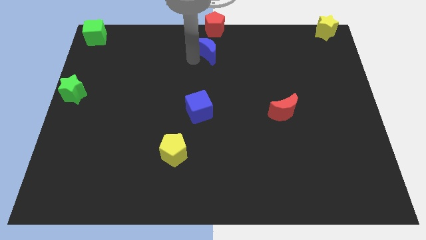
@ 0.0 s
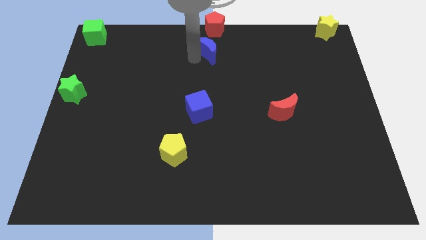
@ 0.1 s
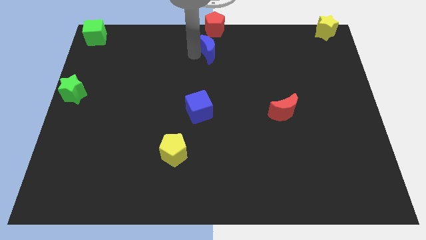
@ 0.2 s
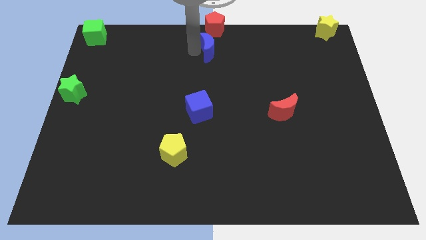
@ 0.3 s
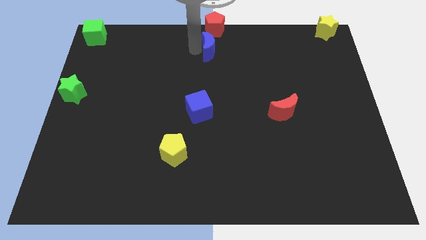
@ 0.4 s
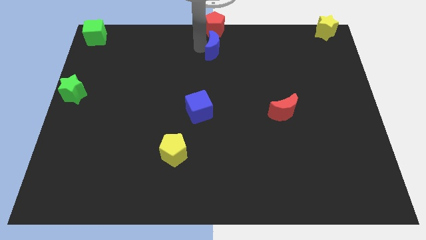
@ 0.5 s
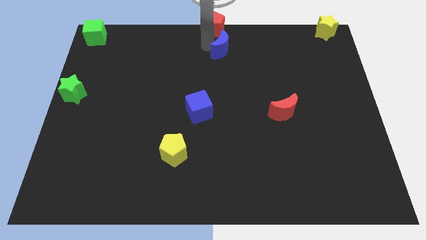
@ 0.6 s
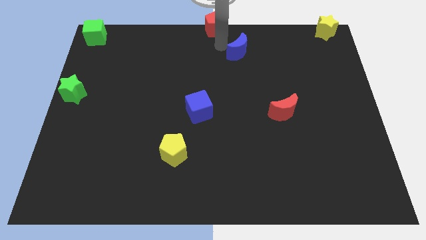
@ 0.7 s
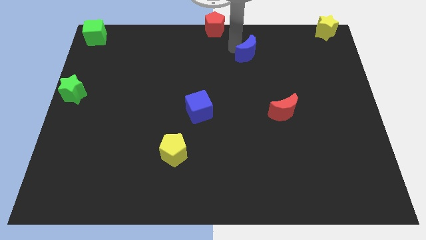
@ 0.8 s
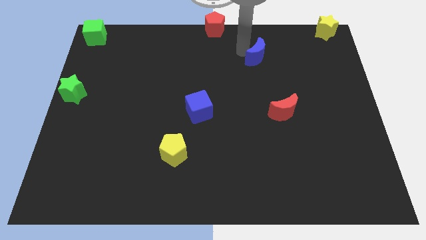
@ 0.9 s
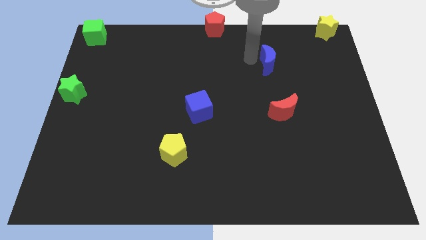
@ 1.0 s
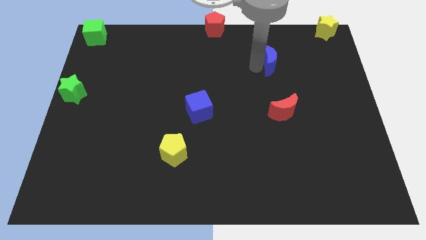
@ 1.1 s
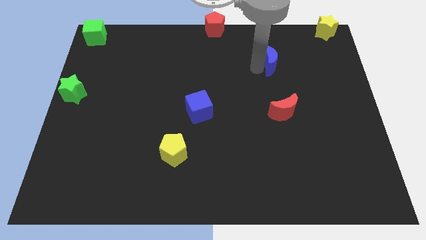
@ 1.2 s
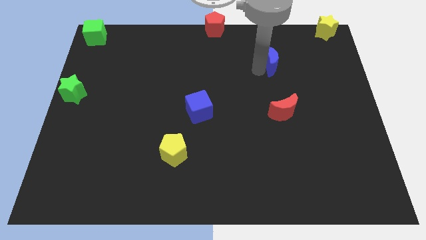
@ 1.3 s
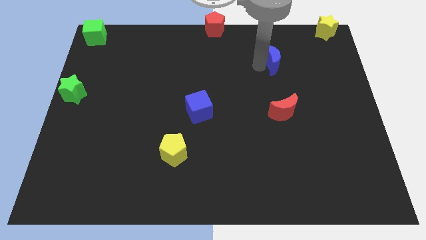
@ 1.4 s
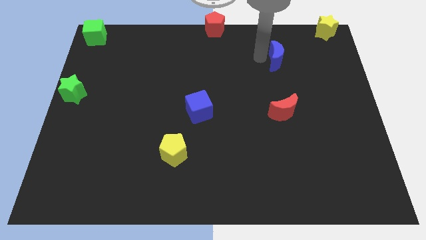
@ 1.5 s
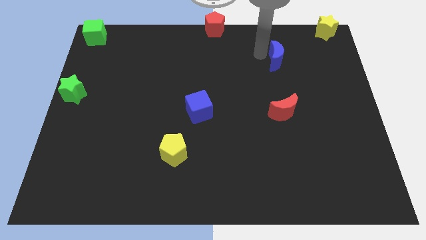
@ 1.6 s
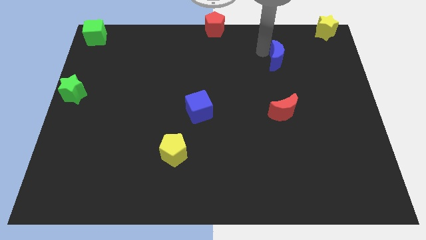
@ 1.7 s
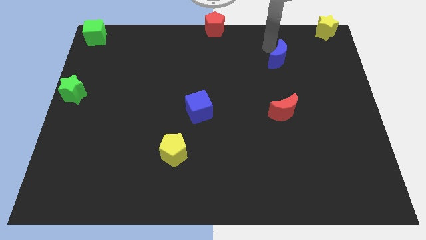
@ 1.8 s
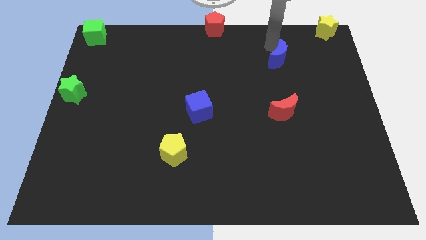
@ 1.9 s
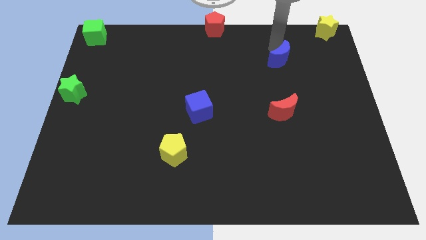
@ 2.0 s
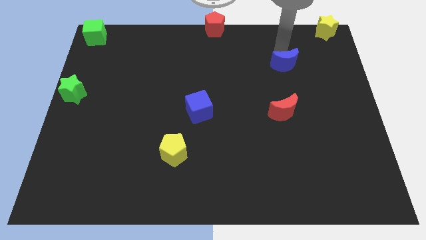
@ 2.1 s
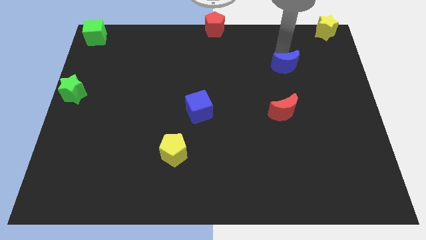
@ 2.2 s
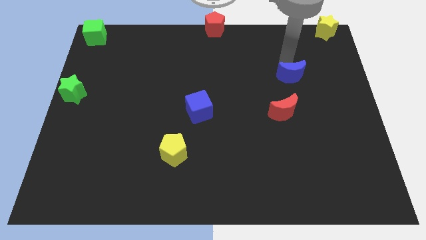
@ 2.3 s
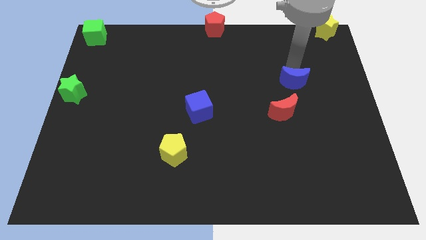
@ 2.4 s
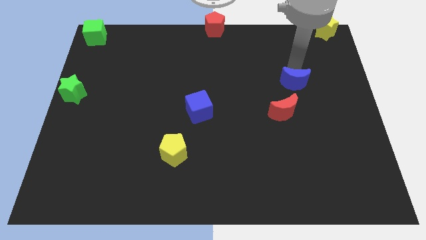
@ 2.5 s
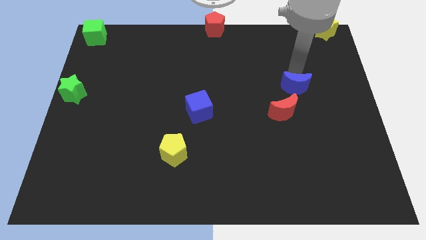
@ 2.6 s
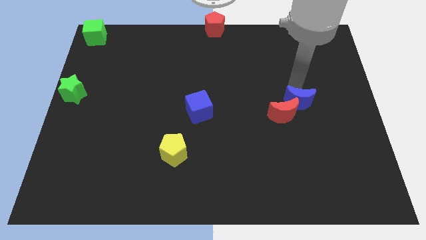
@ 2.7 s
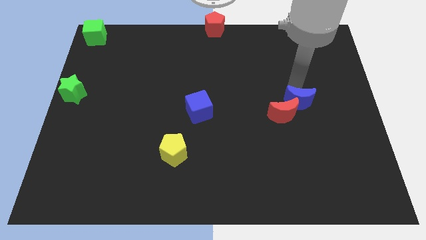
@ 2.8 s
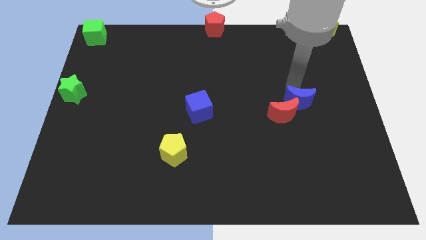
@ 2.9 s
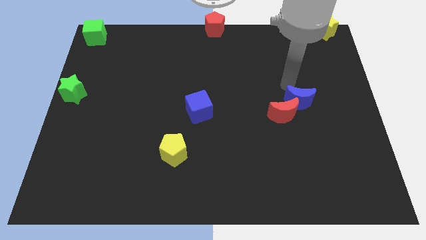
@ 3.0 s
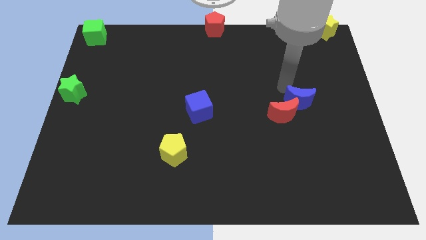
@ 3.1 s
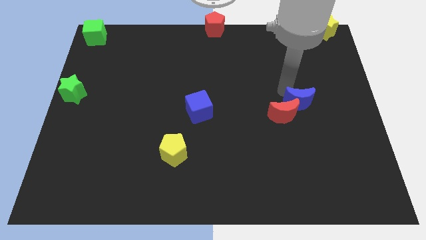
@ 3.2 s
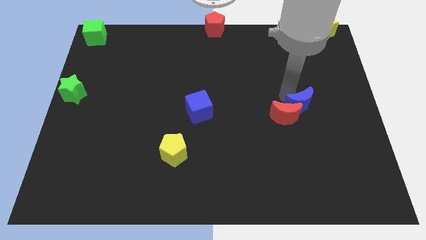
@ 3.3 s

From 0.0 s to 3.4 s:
slide the blue moon into the red moon

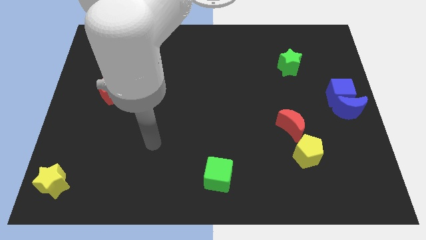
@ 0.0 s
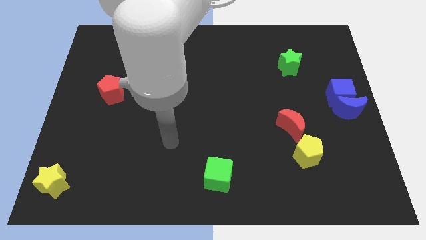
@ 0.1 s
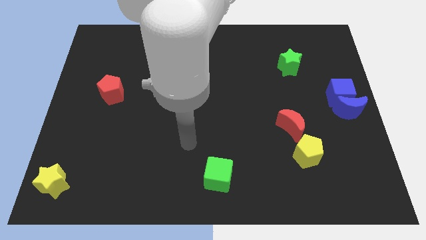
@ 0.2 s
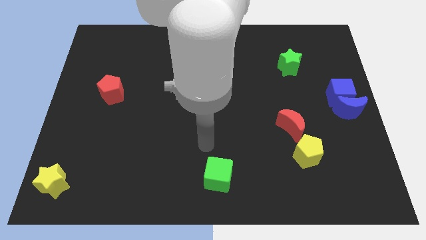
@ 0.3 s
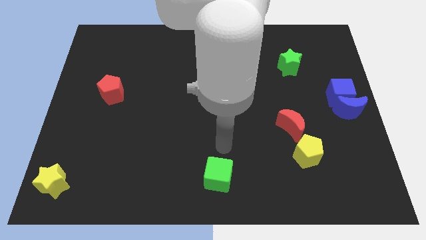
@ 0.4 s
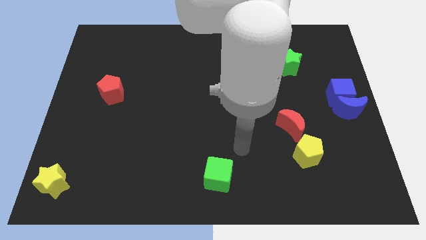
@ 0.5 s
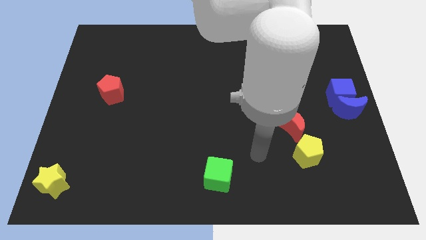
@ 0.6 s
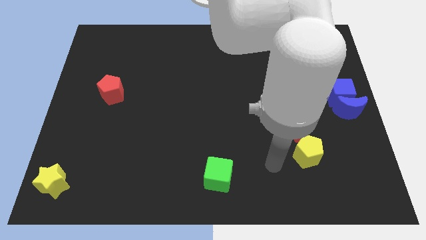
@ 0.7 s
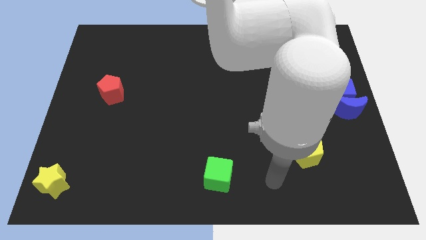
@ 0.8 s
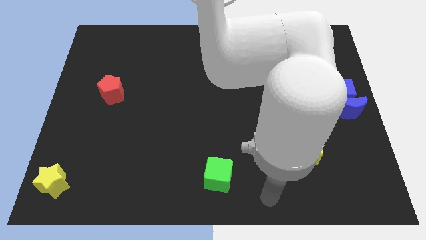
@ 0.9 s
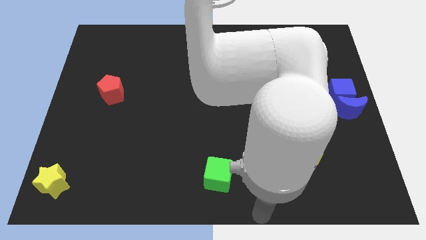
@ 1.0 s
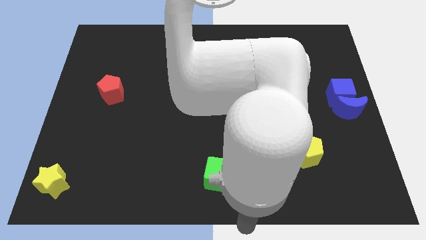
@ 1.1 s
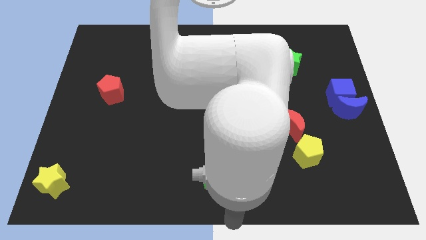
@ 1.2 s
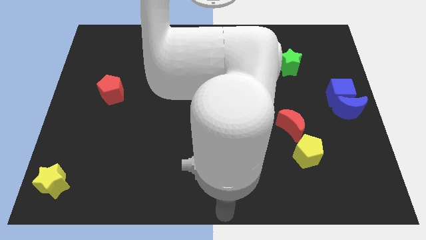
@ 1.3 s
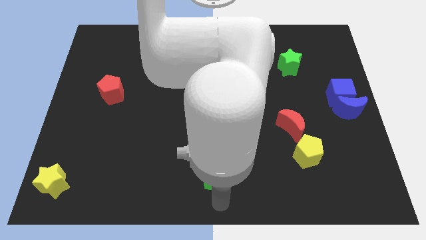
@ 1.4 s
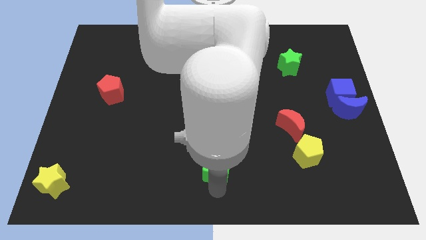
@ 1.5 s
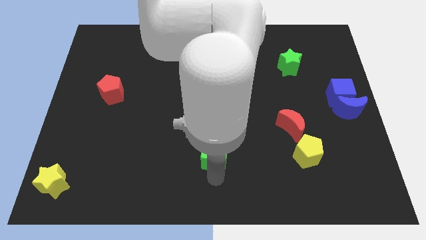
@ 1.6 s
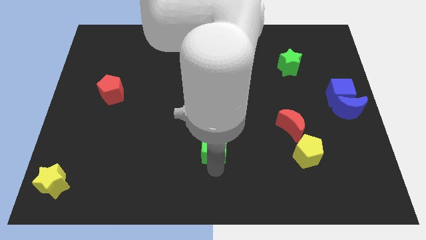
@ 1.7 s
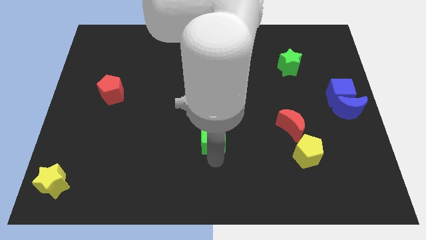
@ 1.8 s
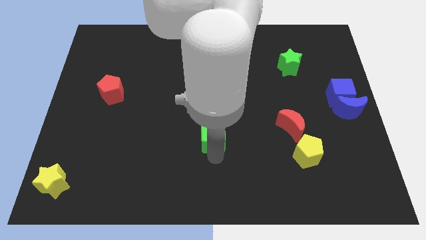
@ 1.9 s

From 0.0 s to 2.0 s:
push green cube upwards

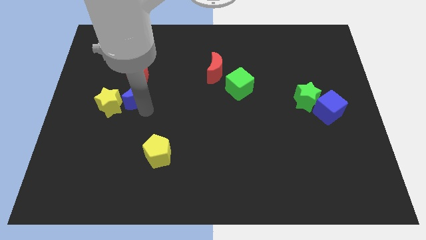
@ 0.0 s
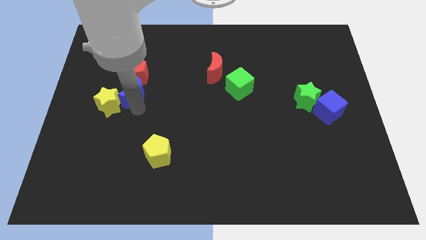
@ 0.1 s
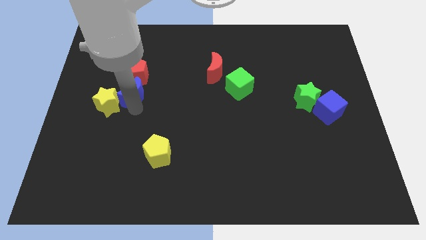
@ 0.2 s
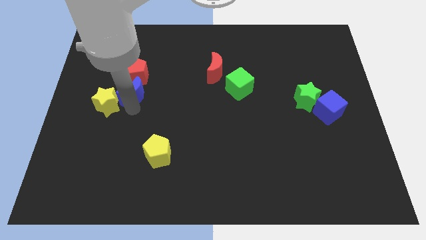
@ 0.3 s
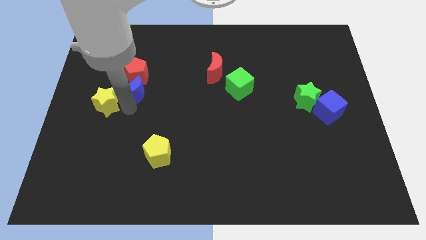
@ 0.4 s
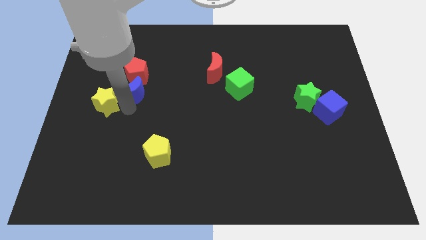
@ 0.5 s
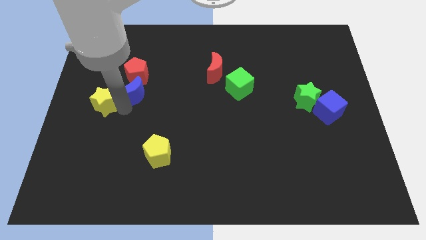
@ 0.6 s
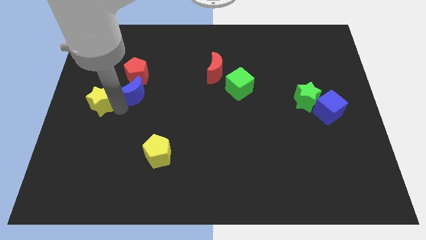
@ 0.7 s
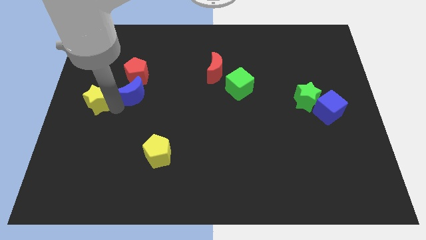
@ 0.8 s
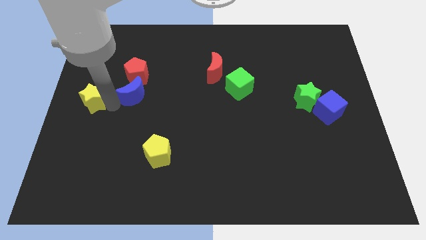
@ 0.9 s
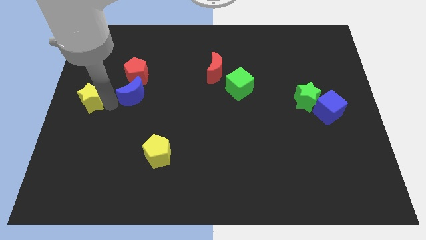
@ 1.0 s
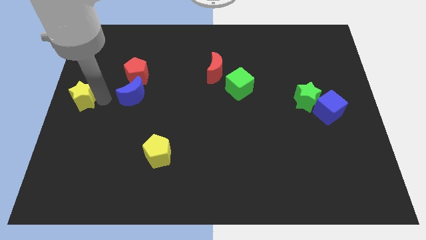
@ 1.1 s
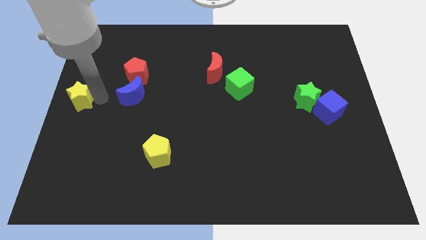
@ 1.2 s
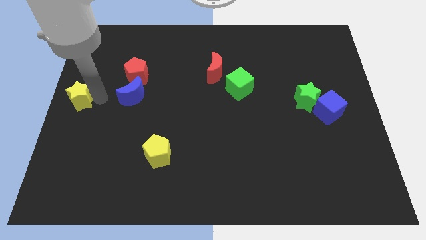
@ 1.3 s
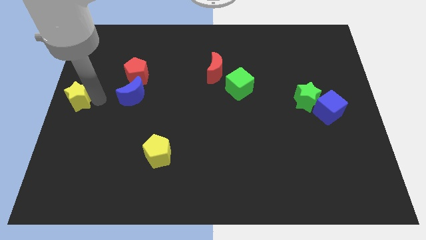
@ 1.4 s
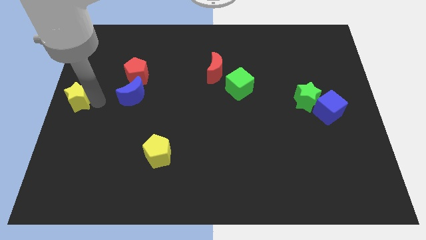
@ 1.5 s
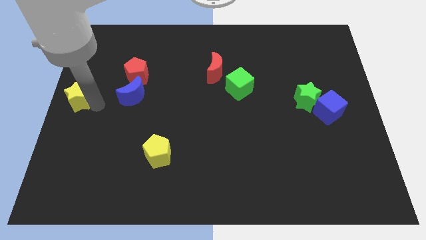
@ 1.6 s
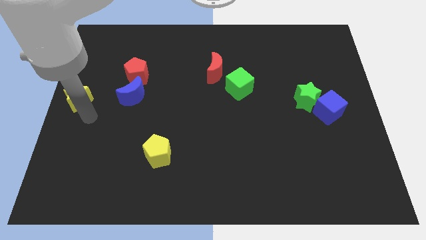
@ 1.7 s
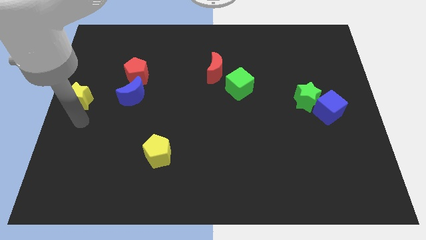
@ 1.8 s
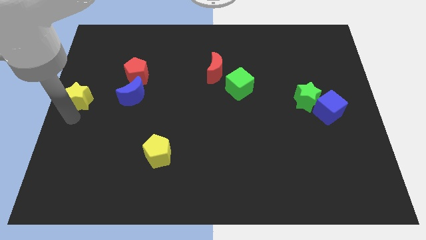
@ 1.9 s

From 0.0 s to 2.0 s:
separate the yellow star from the blue moon

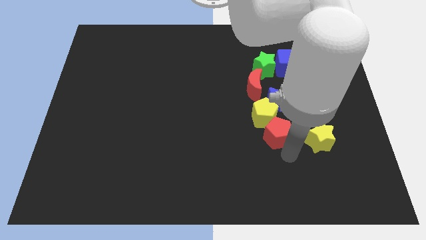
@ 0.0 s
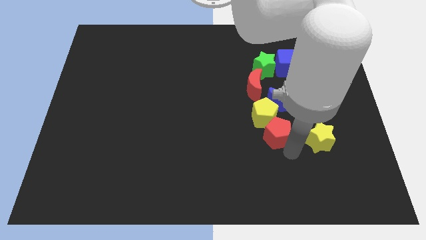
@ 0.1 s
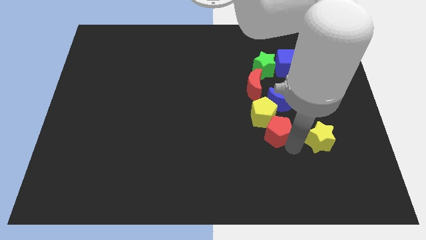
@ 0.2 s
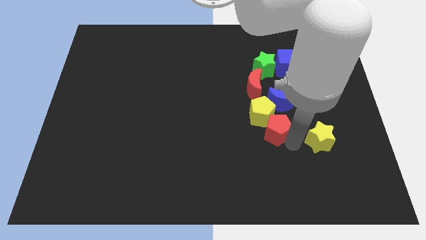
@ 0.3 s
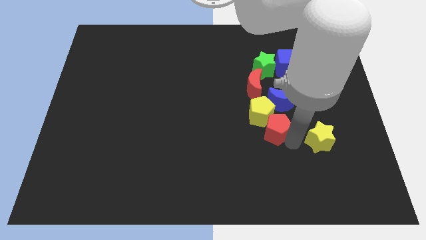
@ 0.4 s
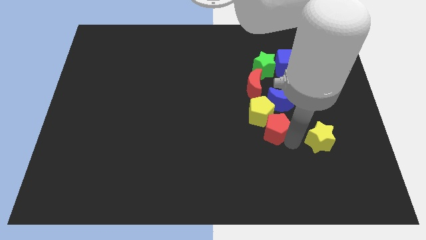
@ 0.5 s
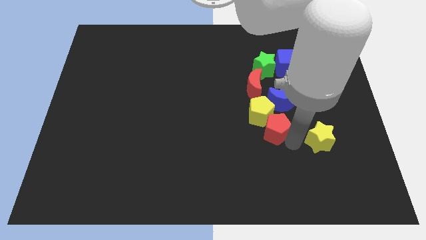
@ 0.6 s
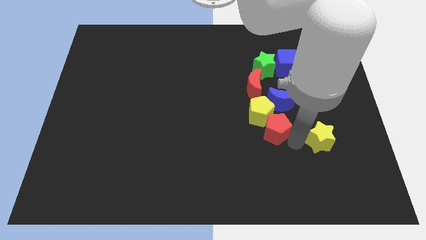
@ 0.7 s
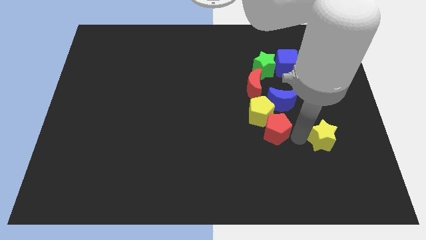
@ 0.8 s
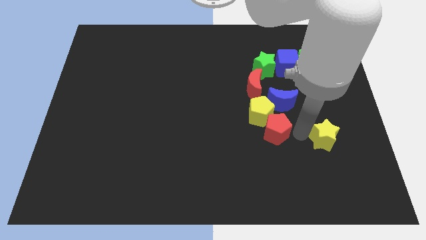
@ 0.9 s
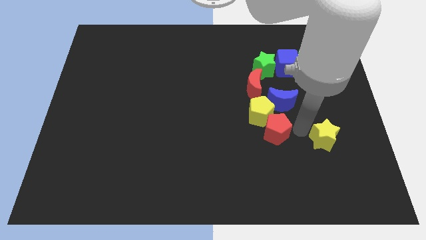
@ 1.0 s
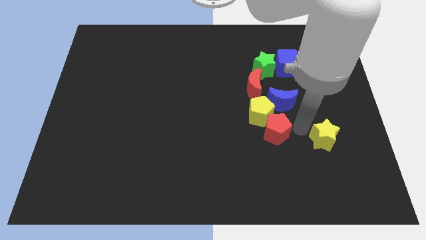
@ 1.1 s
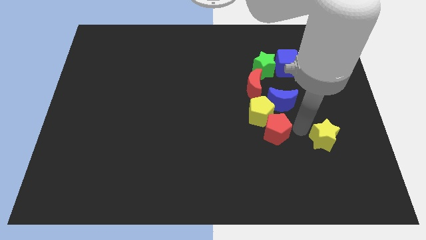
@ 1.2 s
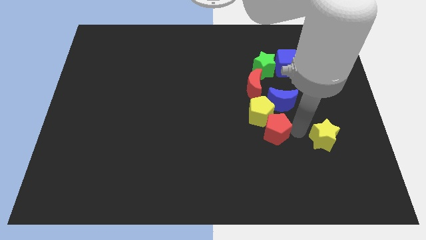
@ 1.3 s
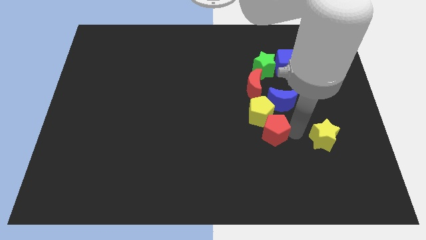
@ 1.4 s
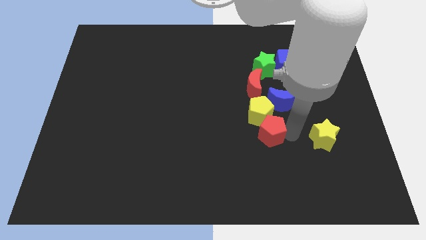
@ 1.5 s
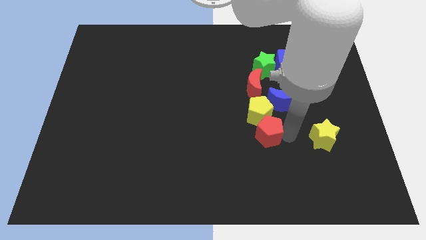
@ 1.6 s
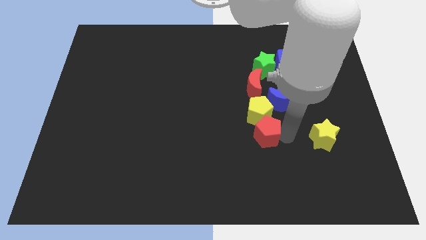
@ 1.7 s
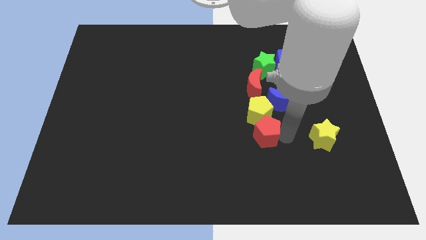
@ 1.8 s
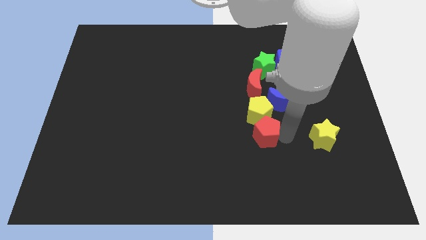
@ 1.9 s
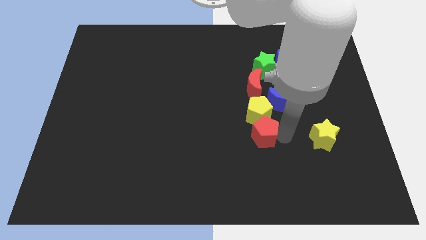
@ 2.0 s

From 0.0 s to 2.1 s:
slightly move the red pentagon into the yellow pentagon
